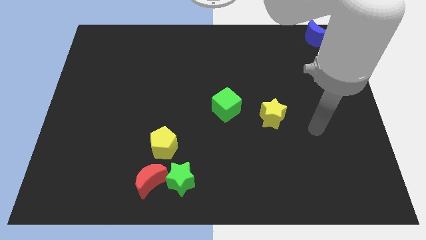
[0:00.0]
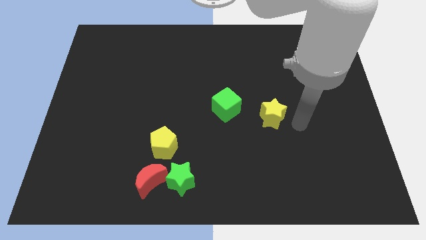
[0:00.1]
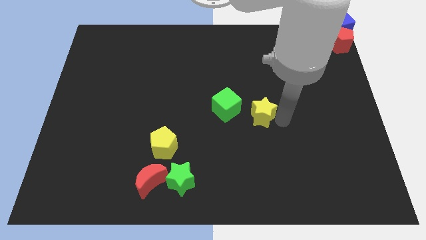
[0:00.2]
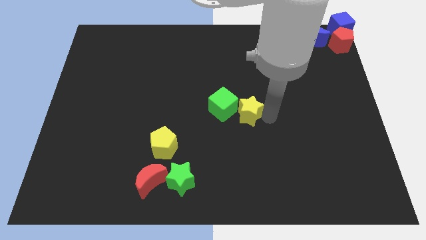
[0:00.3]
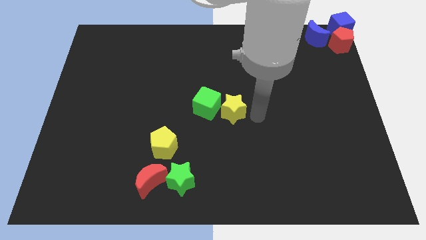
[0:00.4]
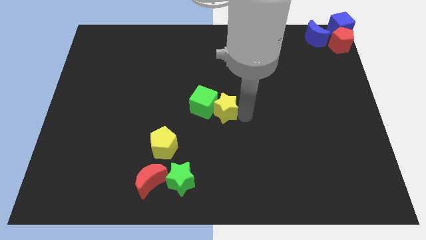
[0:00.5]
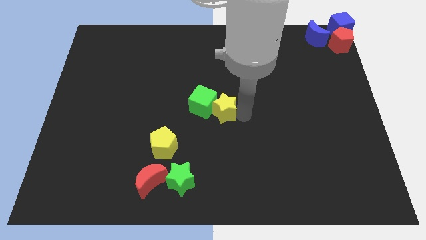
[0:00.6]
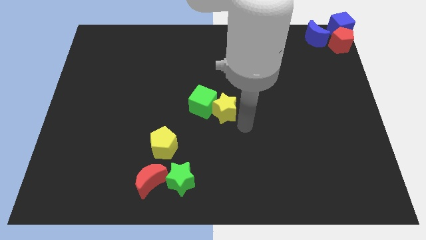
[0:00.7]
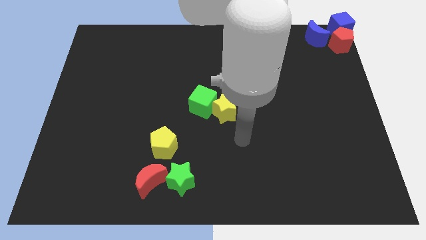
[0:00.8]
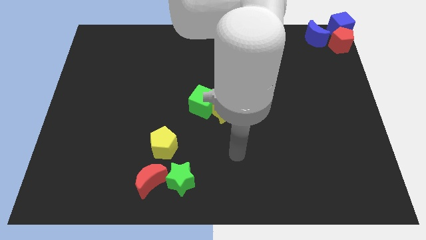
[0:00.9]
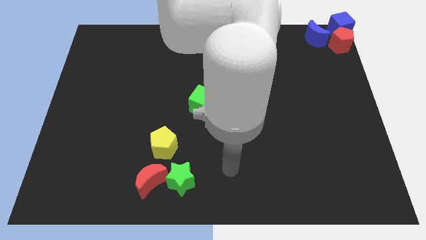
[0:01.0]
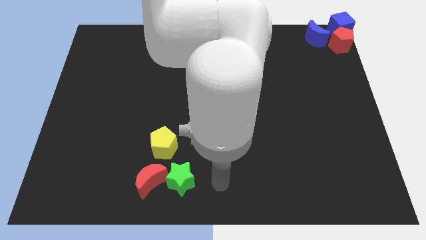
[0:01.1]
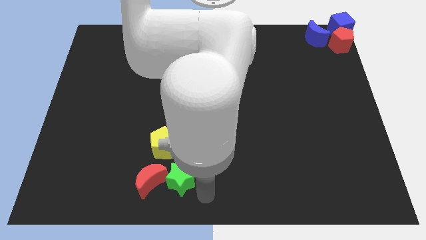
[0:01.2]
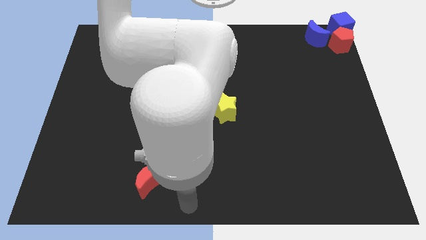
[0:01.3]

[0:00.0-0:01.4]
push the yellow star into the green cube towards left

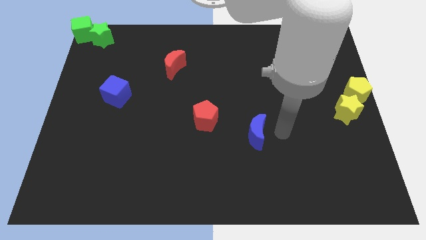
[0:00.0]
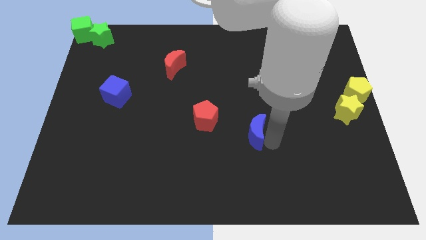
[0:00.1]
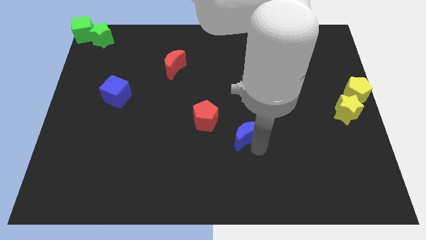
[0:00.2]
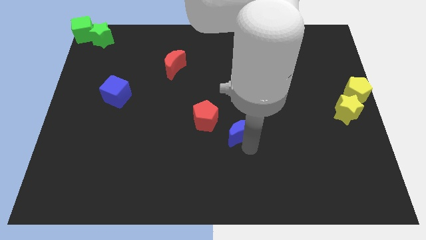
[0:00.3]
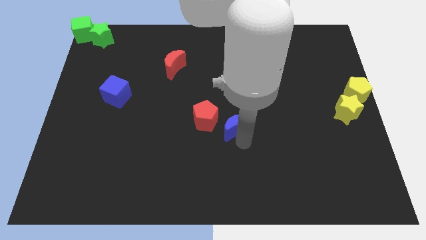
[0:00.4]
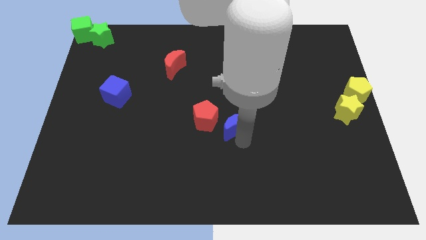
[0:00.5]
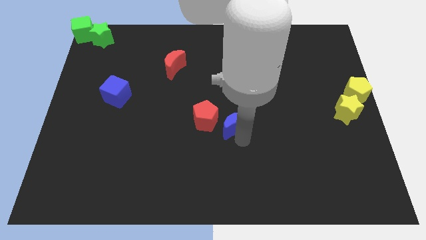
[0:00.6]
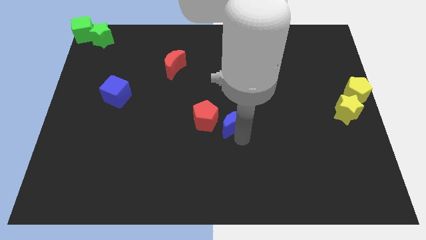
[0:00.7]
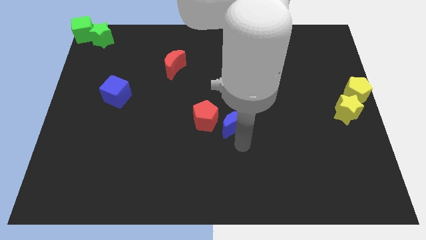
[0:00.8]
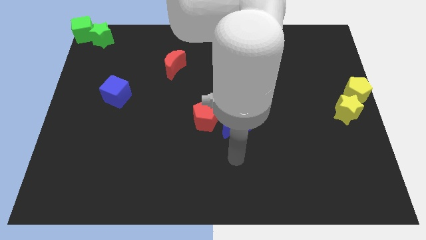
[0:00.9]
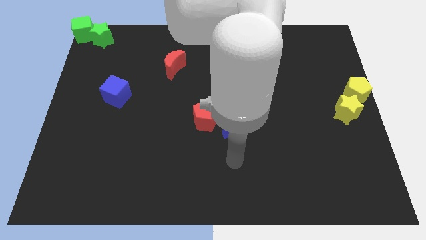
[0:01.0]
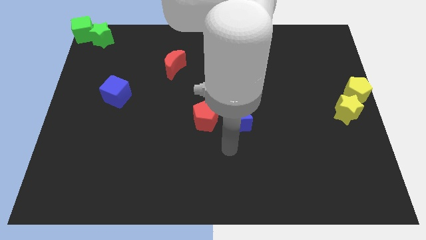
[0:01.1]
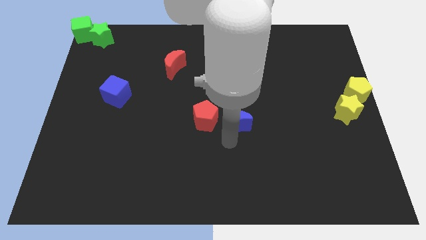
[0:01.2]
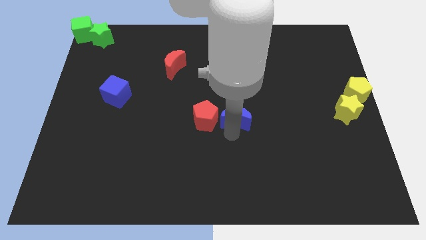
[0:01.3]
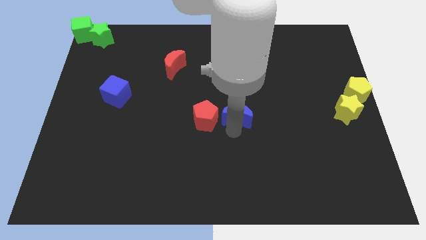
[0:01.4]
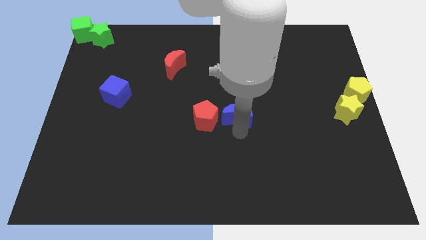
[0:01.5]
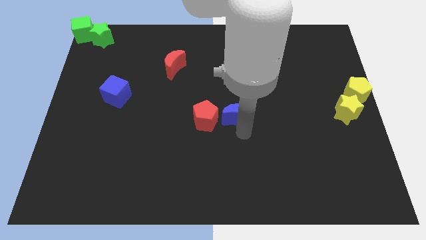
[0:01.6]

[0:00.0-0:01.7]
move the blue moon close to the red pentagon

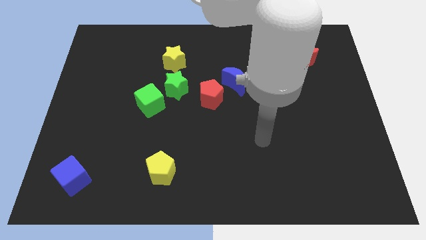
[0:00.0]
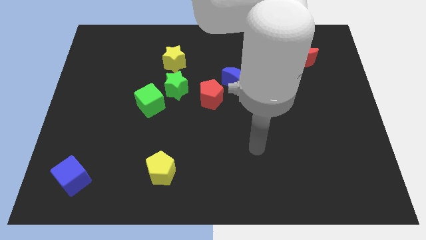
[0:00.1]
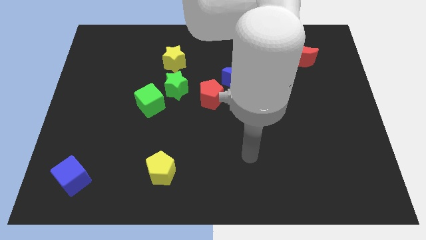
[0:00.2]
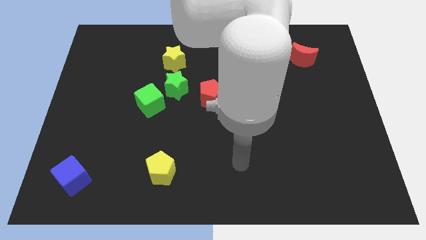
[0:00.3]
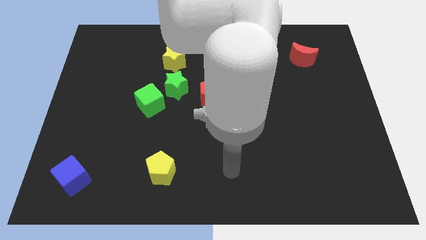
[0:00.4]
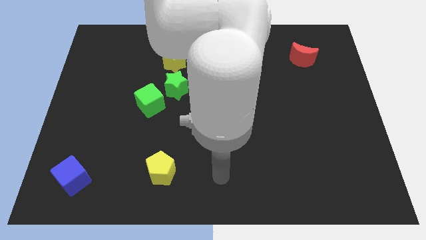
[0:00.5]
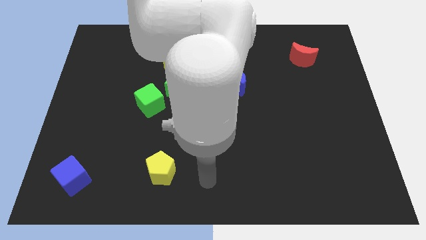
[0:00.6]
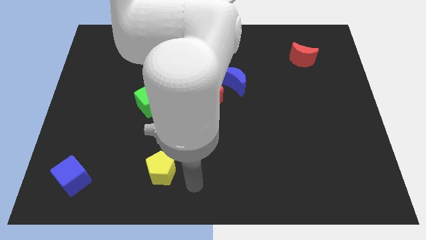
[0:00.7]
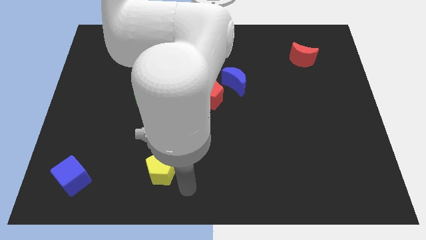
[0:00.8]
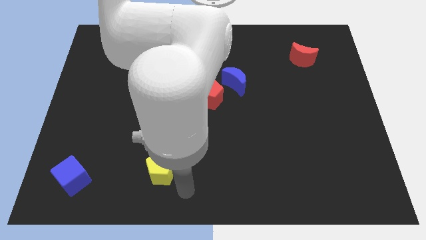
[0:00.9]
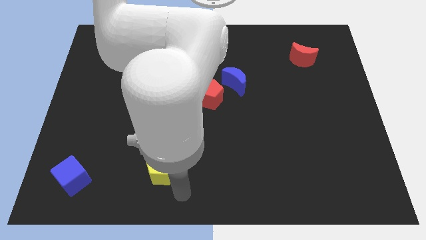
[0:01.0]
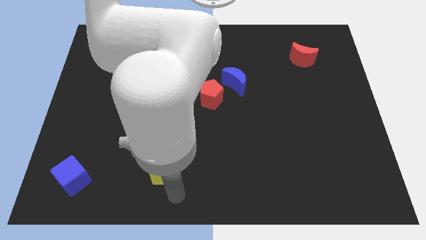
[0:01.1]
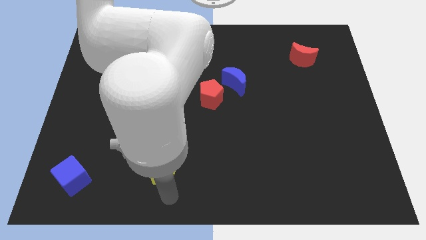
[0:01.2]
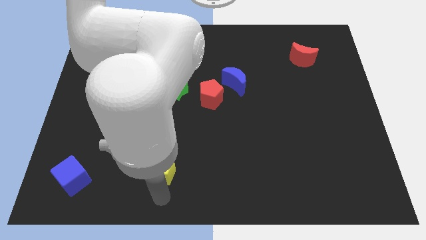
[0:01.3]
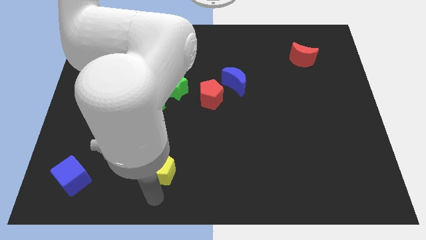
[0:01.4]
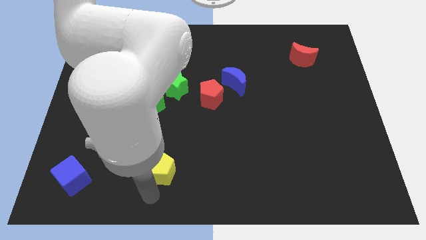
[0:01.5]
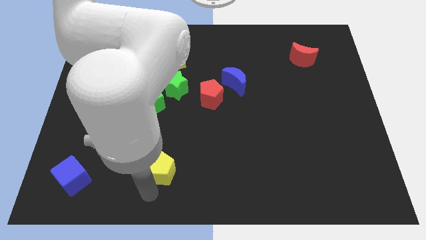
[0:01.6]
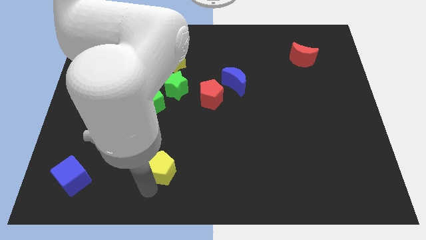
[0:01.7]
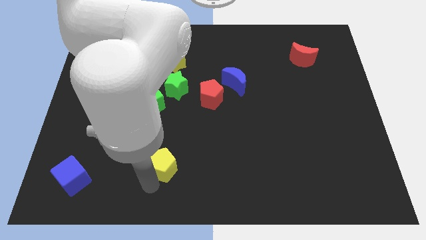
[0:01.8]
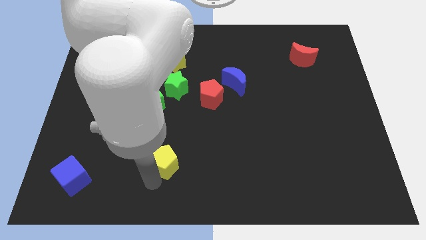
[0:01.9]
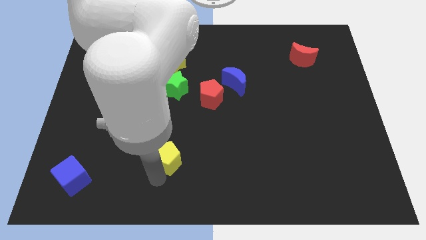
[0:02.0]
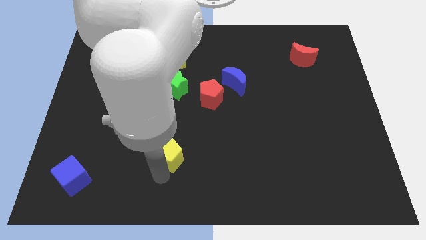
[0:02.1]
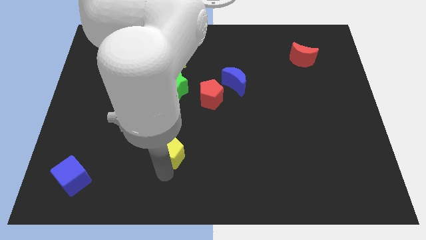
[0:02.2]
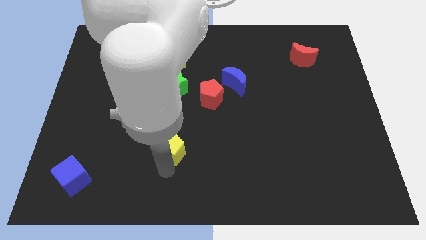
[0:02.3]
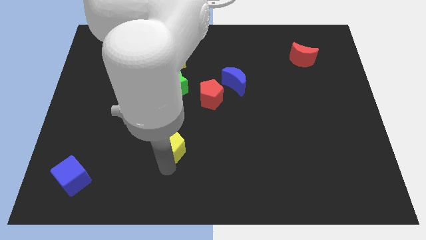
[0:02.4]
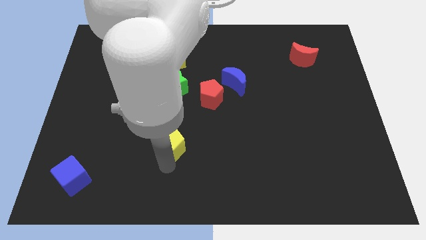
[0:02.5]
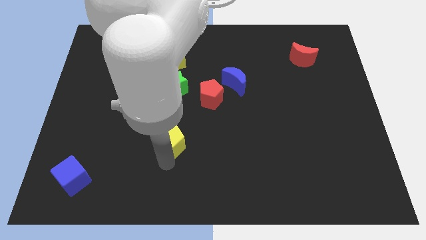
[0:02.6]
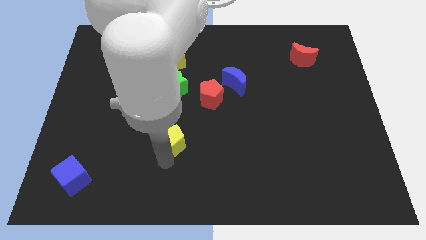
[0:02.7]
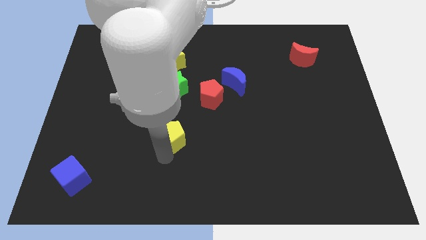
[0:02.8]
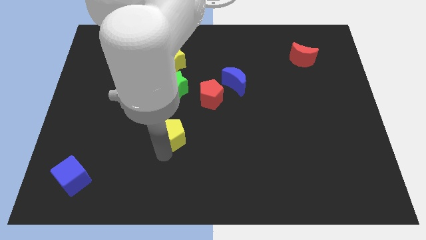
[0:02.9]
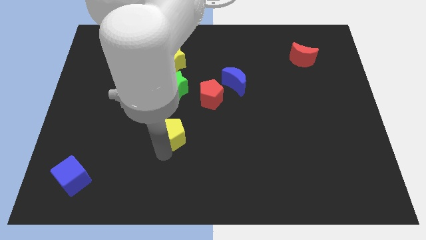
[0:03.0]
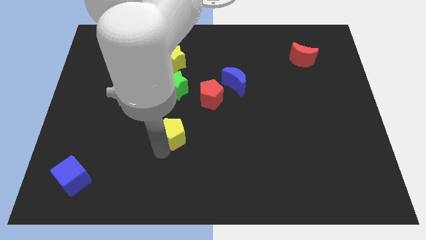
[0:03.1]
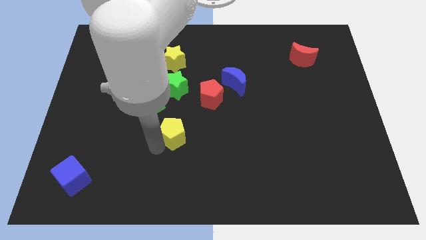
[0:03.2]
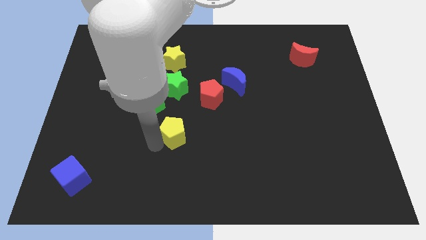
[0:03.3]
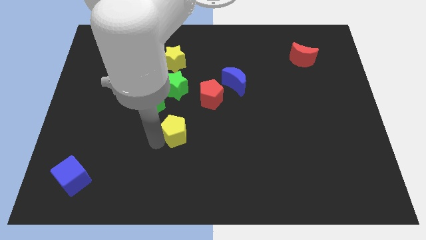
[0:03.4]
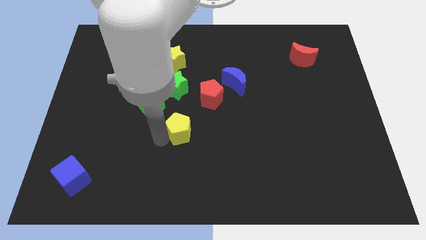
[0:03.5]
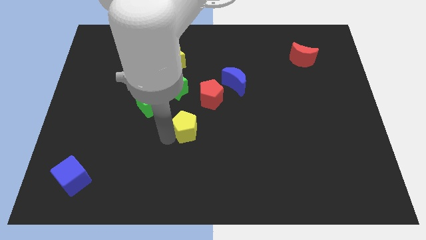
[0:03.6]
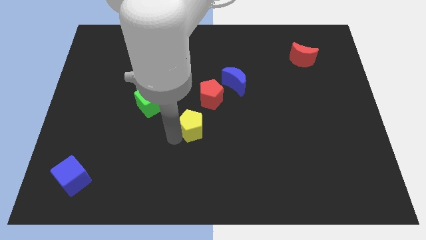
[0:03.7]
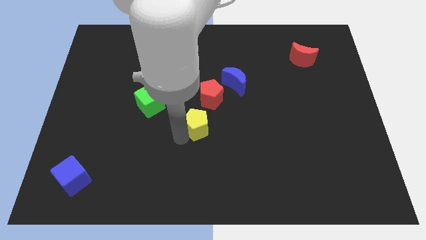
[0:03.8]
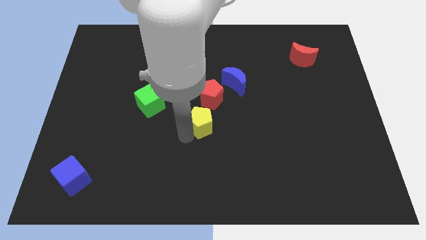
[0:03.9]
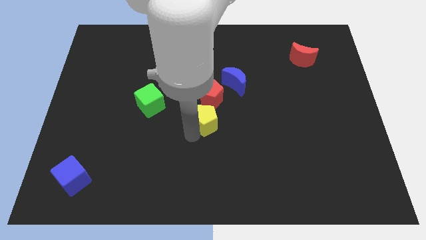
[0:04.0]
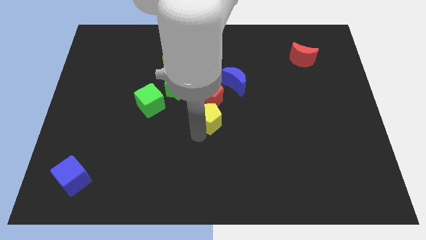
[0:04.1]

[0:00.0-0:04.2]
move the yellow pentagon close to the red pentagon

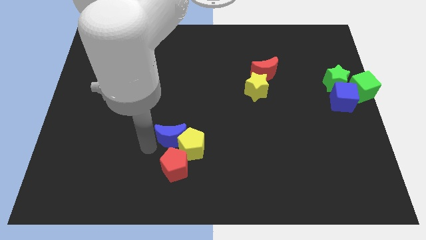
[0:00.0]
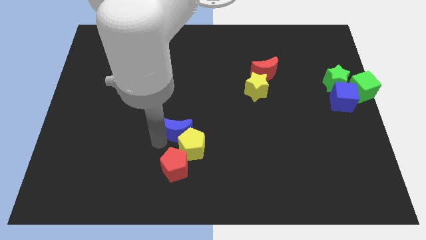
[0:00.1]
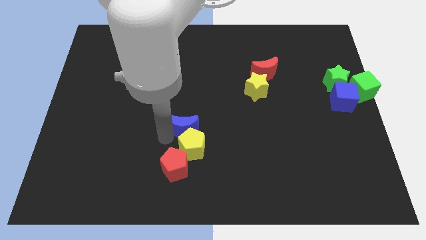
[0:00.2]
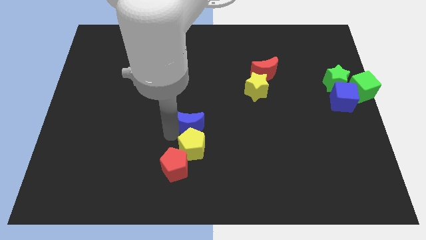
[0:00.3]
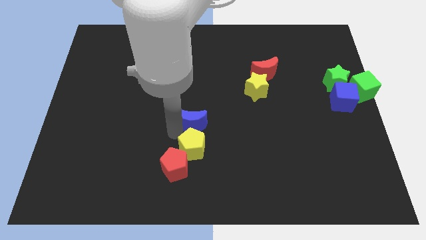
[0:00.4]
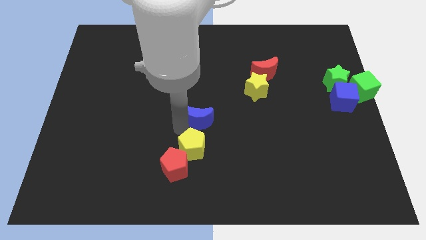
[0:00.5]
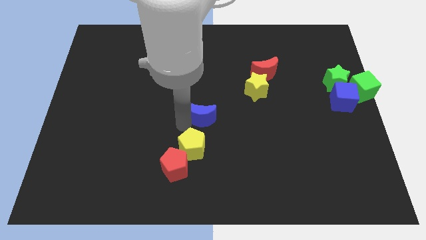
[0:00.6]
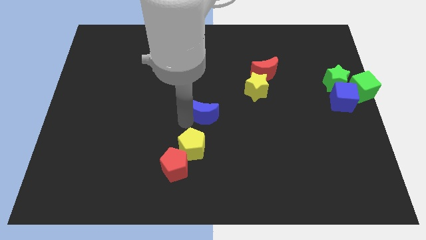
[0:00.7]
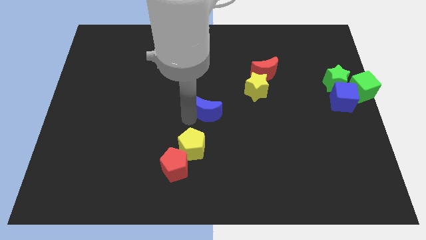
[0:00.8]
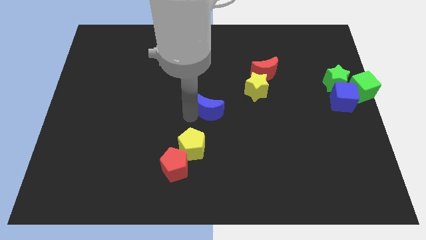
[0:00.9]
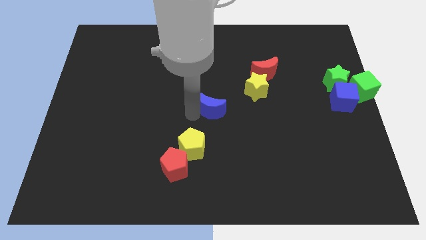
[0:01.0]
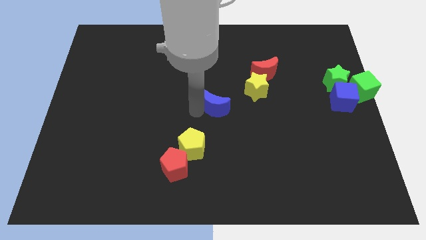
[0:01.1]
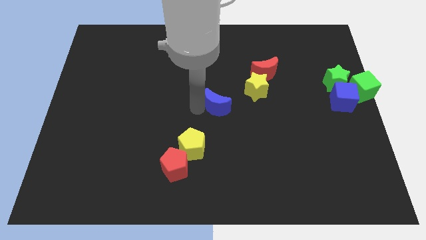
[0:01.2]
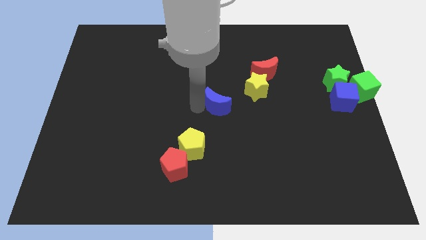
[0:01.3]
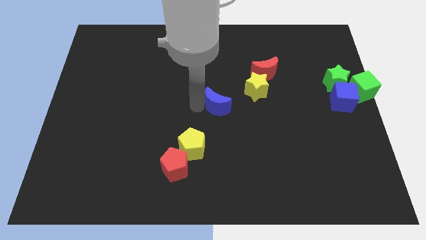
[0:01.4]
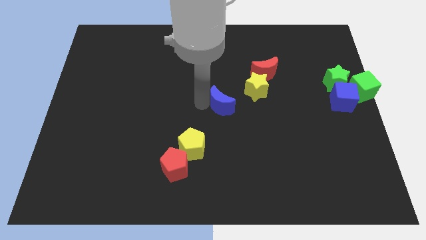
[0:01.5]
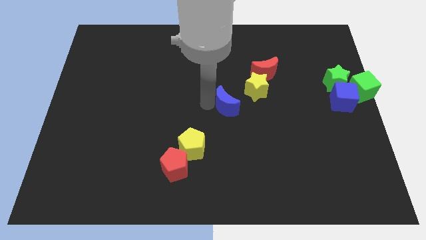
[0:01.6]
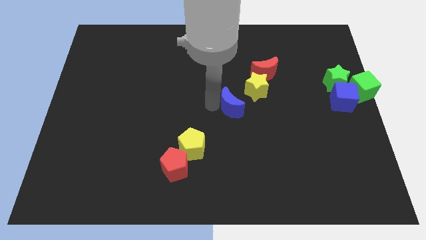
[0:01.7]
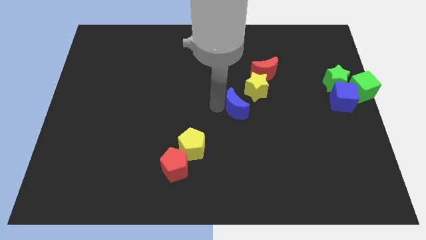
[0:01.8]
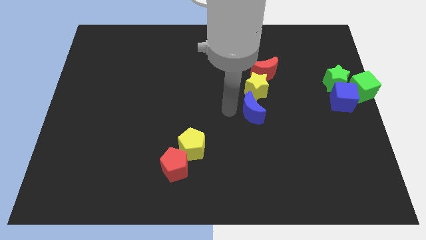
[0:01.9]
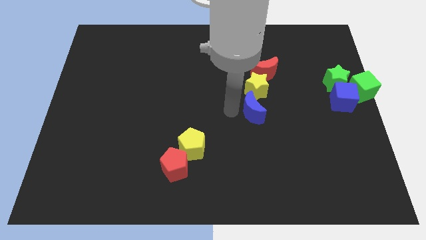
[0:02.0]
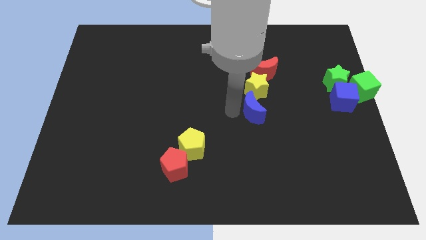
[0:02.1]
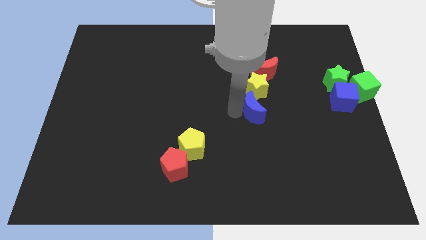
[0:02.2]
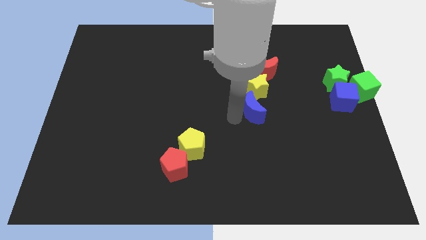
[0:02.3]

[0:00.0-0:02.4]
move the blue crescent bottom to the yellow star
